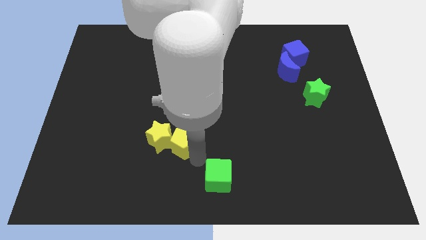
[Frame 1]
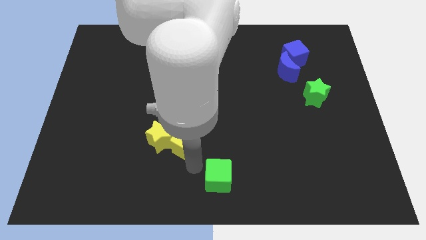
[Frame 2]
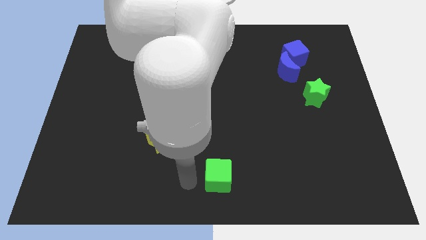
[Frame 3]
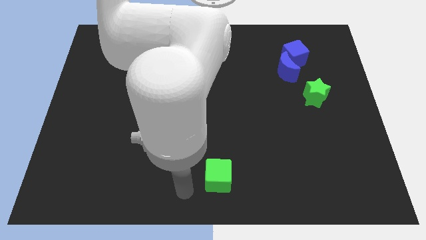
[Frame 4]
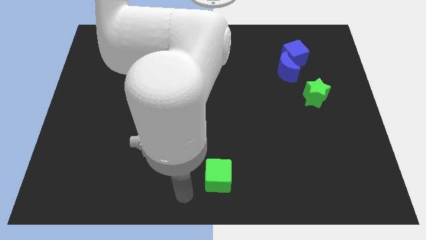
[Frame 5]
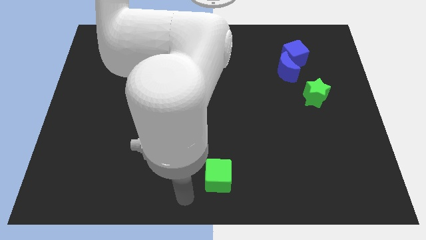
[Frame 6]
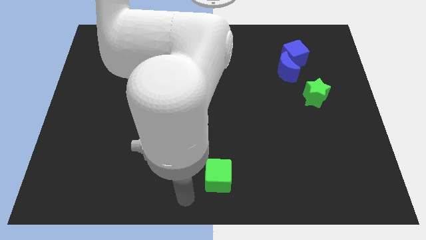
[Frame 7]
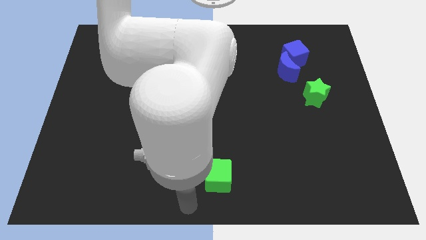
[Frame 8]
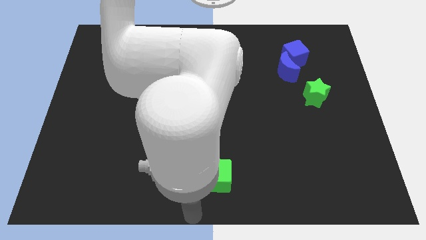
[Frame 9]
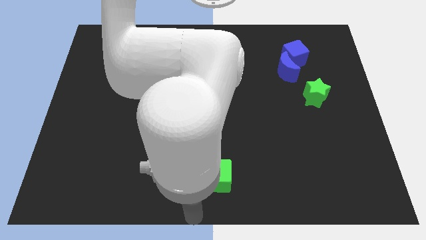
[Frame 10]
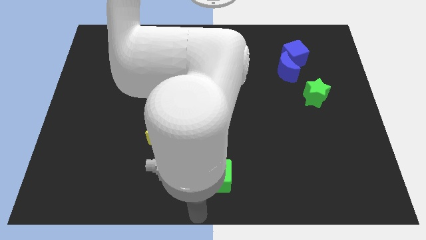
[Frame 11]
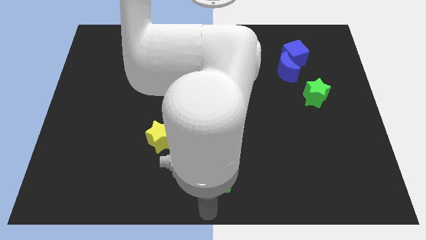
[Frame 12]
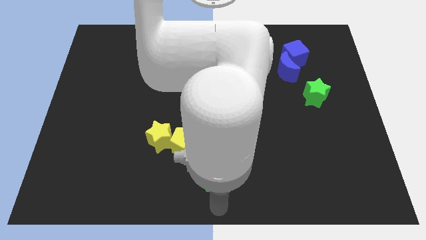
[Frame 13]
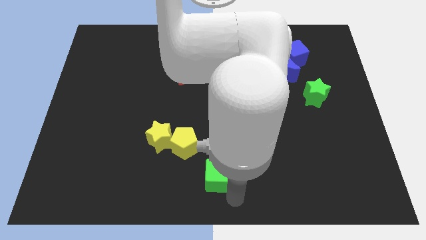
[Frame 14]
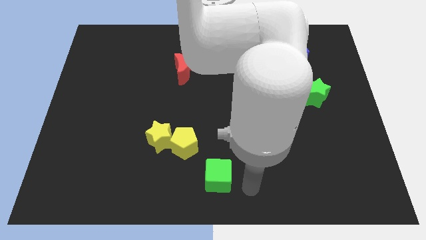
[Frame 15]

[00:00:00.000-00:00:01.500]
move your arm away from the yellow pentagon

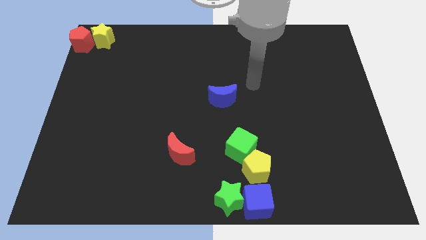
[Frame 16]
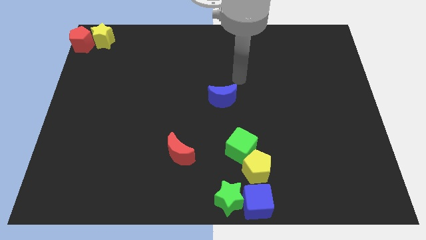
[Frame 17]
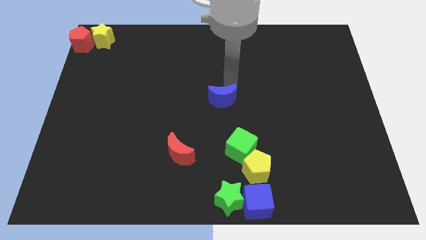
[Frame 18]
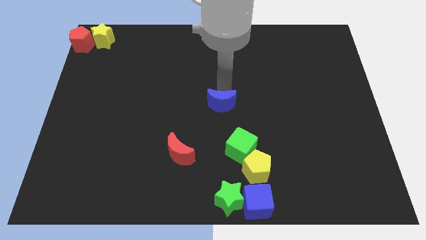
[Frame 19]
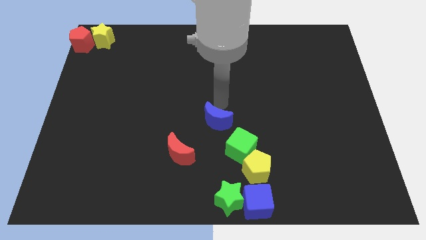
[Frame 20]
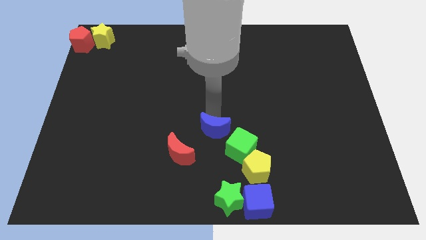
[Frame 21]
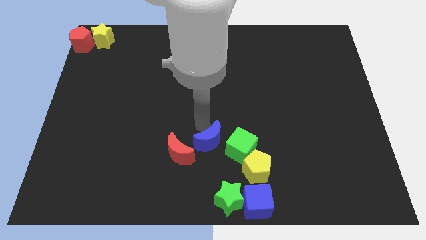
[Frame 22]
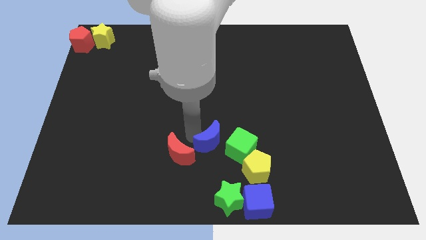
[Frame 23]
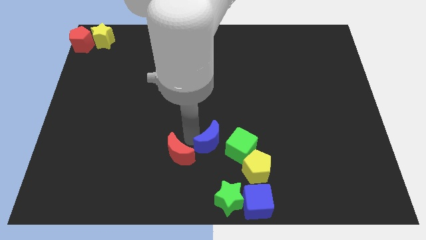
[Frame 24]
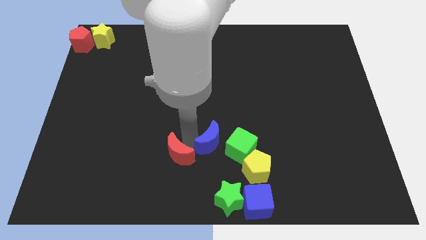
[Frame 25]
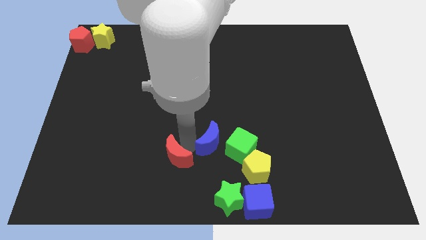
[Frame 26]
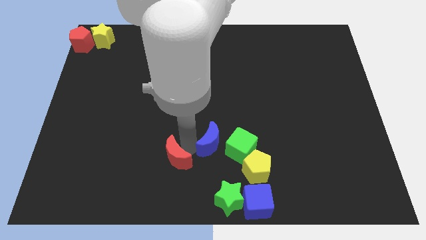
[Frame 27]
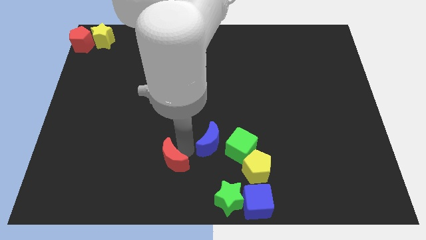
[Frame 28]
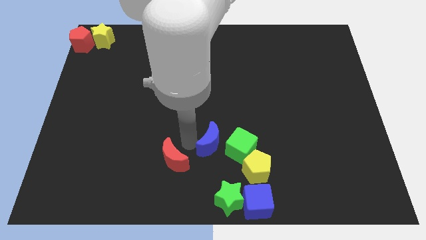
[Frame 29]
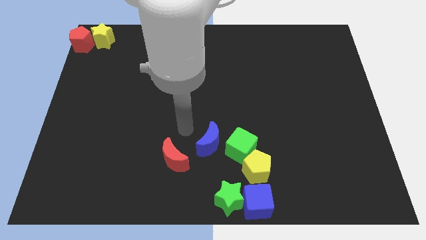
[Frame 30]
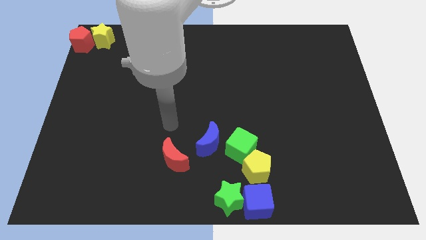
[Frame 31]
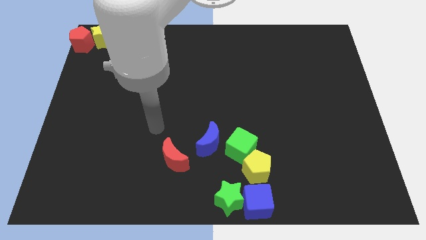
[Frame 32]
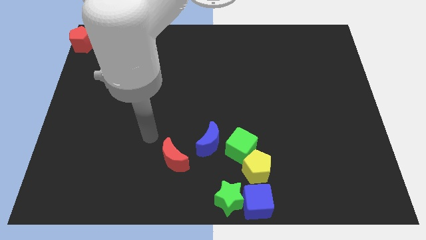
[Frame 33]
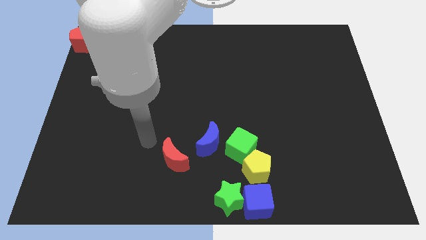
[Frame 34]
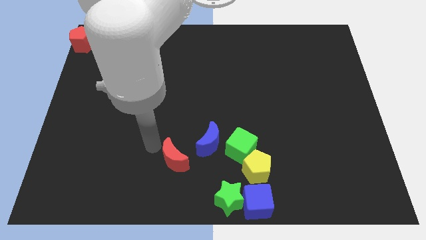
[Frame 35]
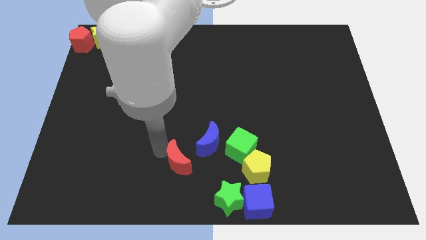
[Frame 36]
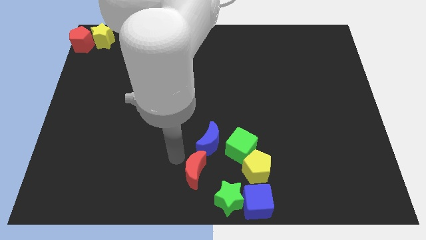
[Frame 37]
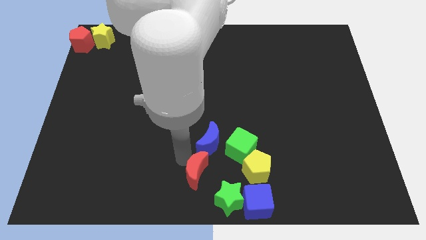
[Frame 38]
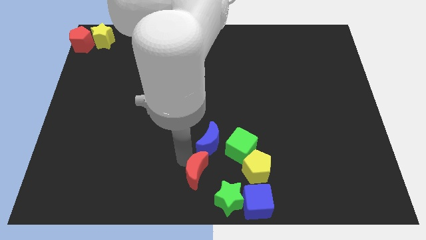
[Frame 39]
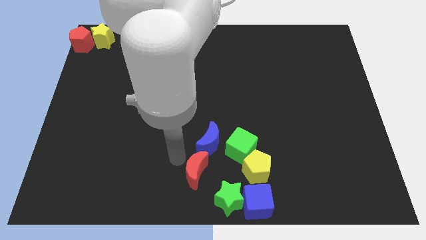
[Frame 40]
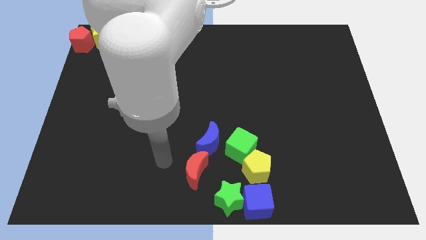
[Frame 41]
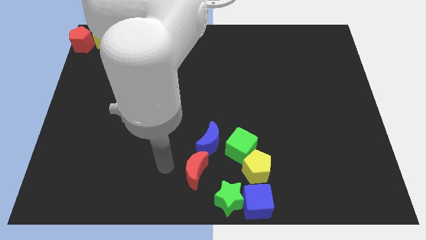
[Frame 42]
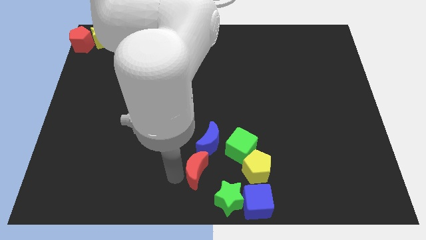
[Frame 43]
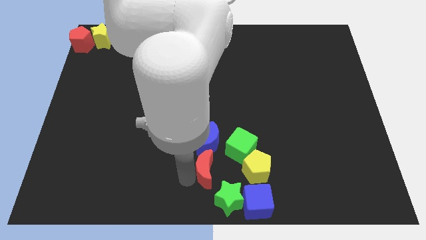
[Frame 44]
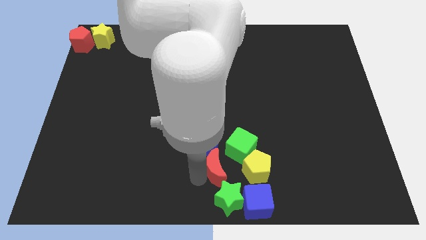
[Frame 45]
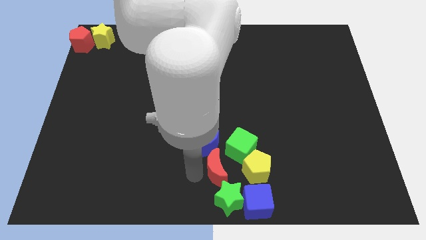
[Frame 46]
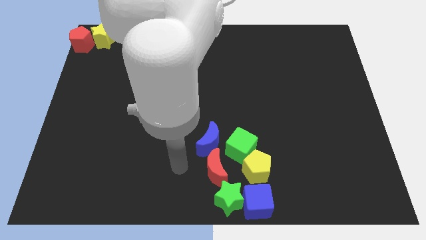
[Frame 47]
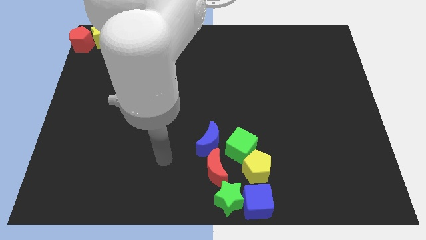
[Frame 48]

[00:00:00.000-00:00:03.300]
place the red moon diagonal to the green star

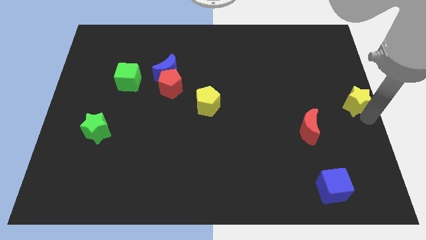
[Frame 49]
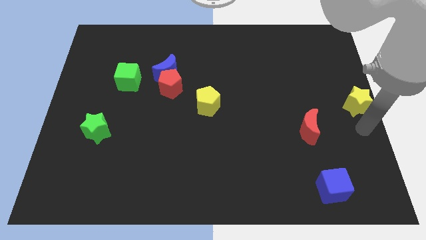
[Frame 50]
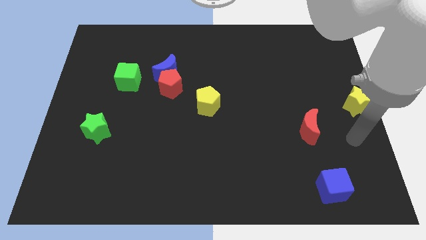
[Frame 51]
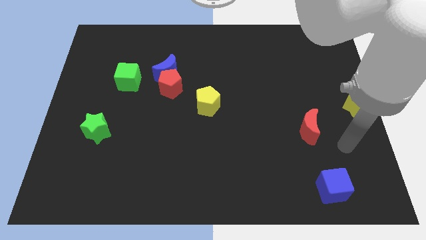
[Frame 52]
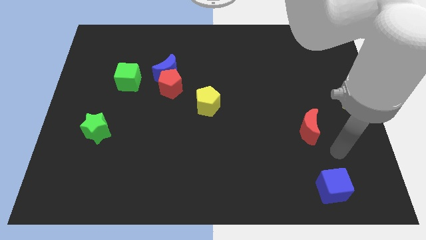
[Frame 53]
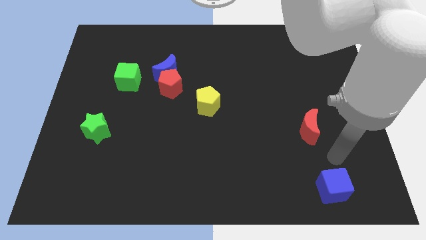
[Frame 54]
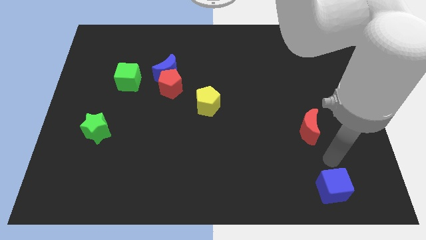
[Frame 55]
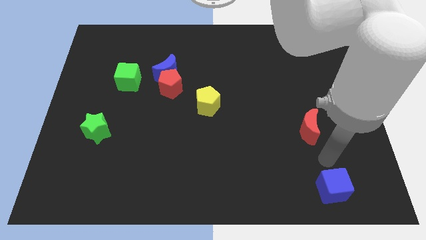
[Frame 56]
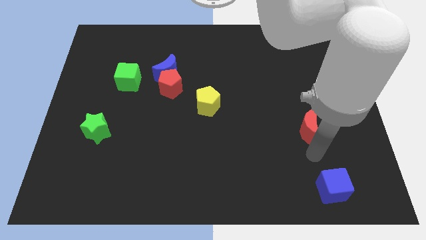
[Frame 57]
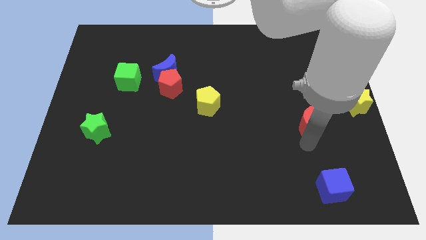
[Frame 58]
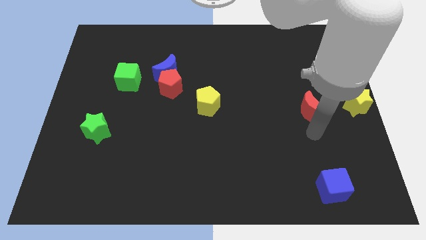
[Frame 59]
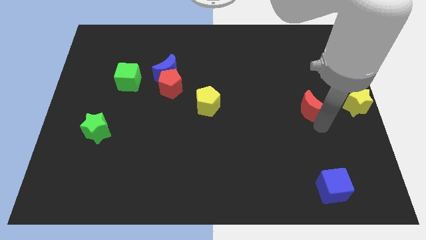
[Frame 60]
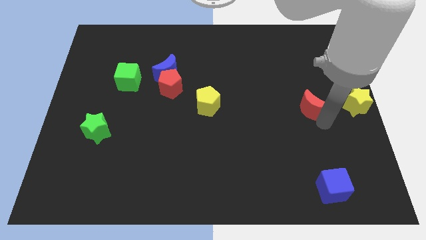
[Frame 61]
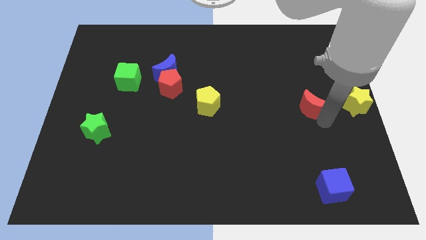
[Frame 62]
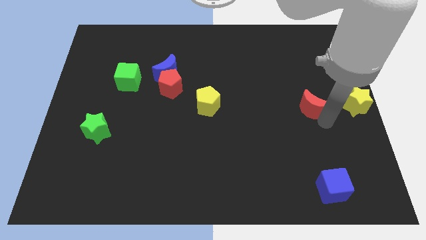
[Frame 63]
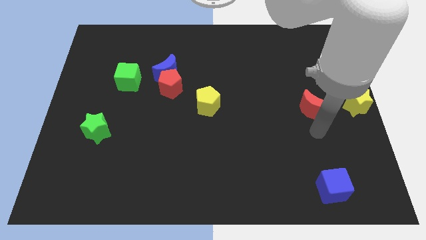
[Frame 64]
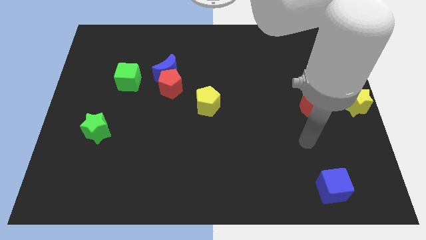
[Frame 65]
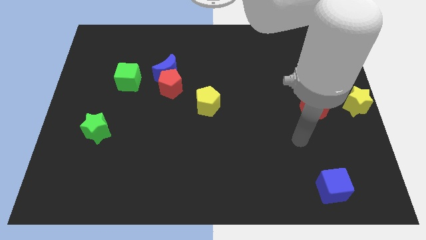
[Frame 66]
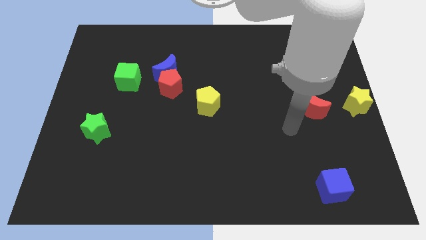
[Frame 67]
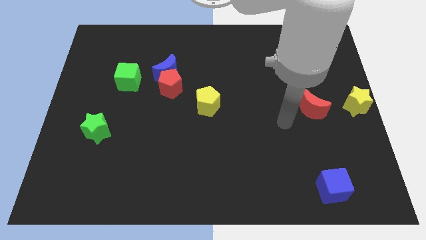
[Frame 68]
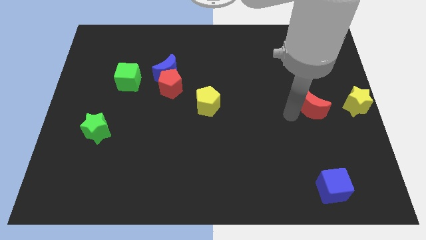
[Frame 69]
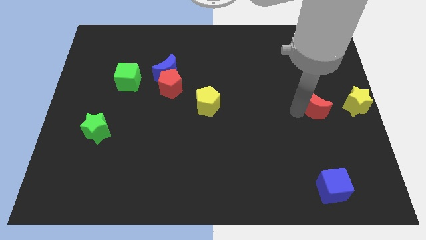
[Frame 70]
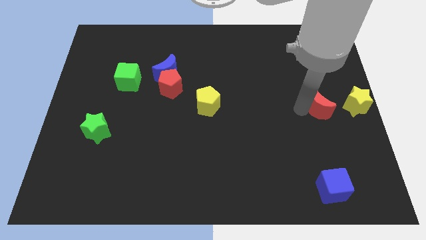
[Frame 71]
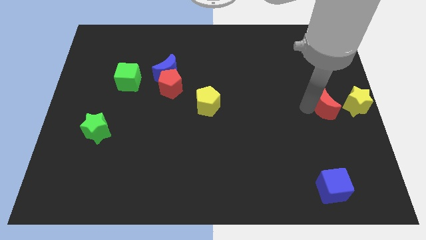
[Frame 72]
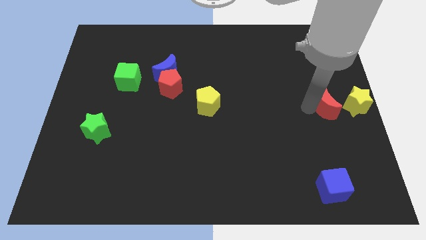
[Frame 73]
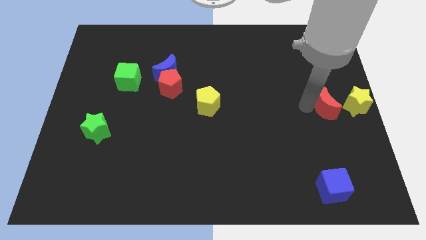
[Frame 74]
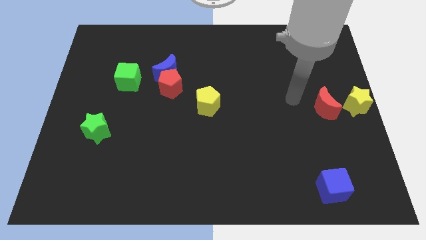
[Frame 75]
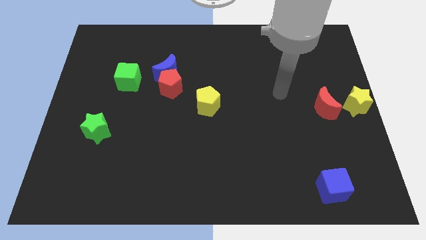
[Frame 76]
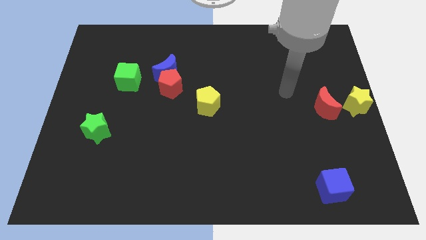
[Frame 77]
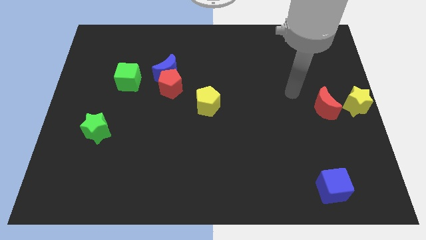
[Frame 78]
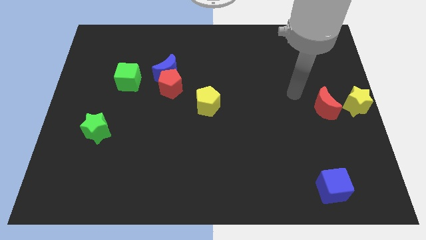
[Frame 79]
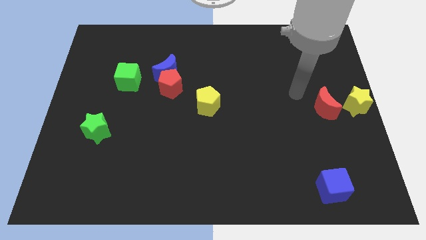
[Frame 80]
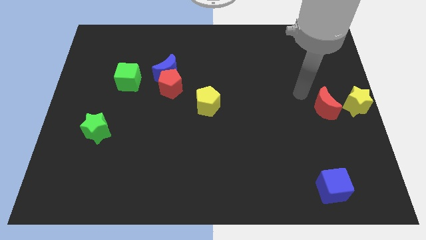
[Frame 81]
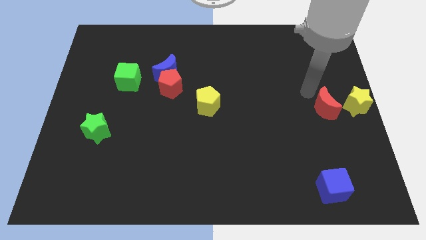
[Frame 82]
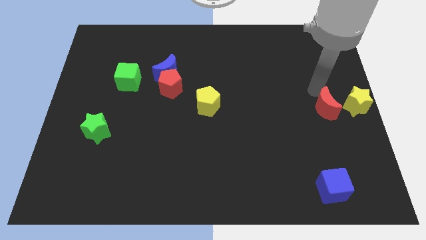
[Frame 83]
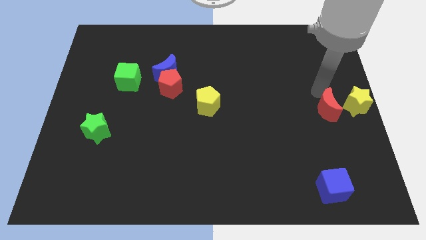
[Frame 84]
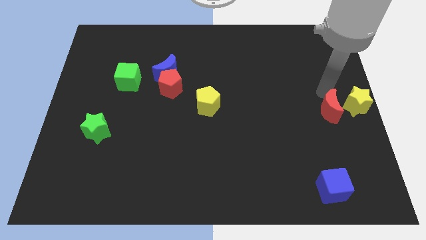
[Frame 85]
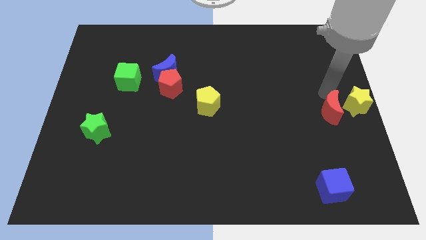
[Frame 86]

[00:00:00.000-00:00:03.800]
push the red crescent left beside the yellow star

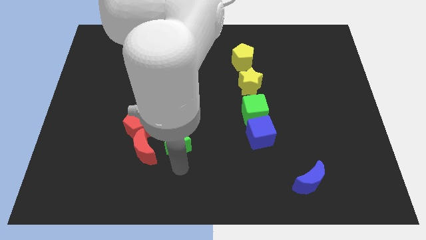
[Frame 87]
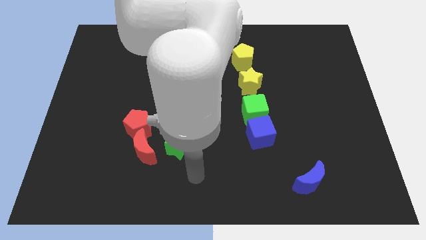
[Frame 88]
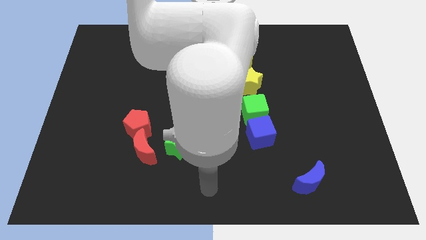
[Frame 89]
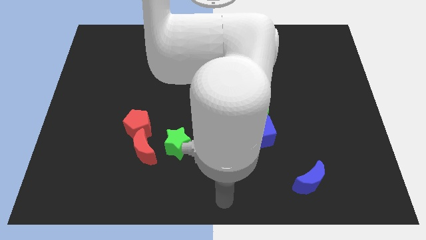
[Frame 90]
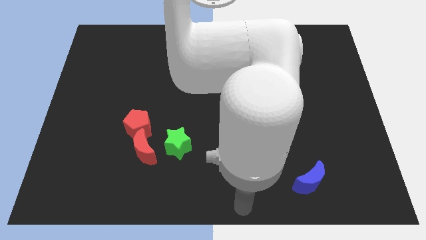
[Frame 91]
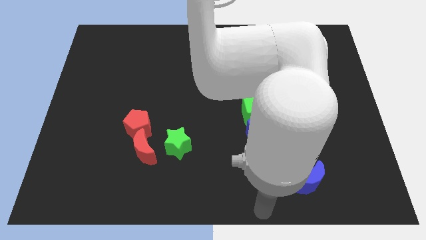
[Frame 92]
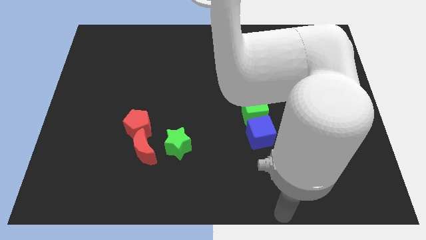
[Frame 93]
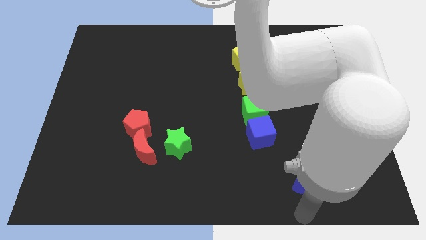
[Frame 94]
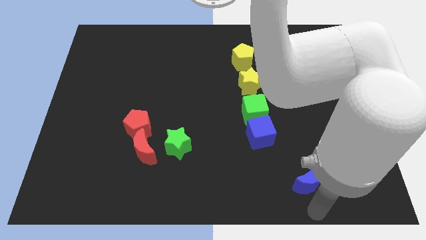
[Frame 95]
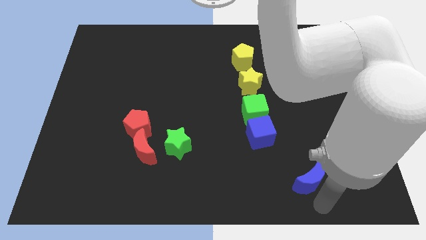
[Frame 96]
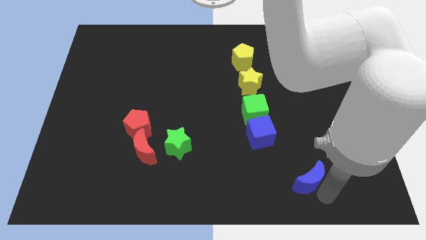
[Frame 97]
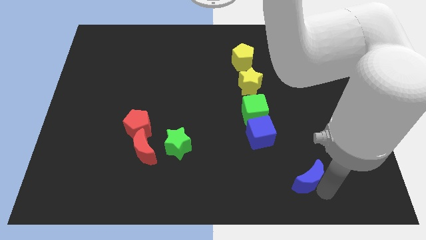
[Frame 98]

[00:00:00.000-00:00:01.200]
slide your hand to the bottom right of blue moon
